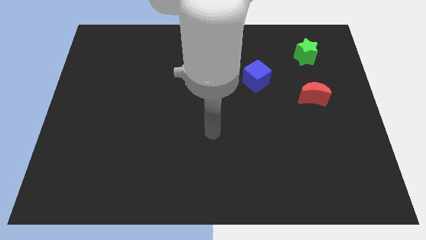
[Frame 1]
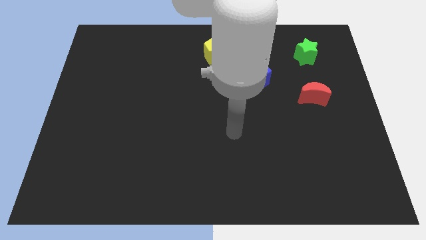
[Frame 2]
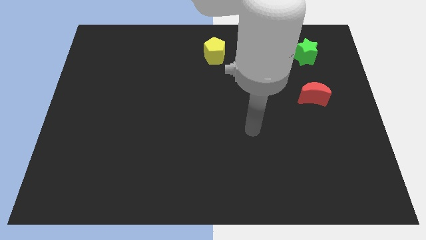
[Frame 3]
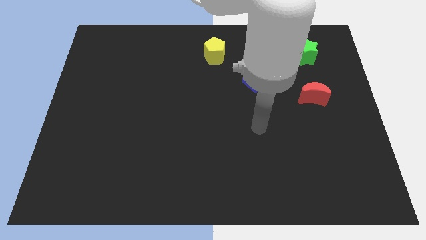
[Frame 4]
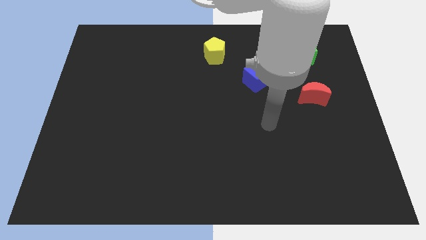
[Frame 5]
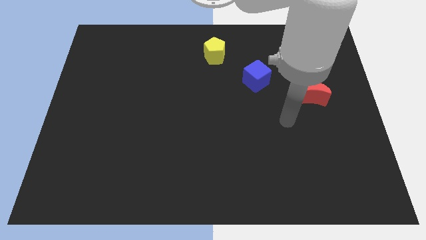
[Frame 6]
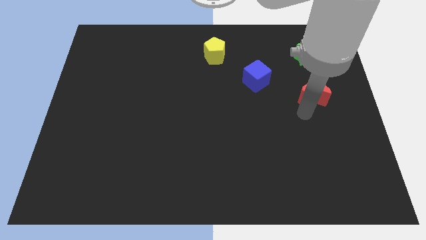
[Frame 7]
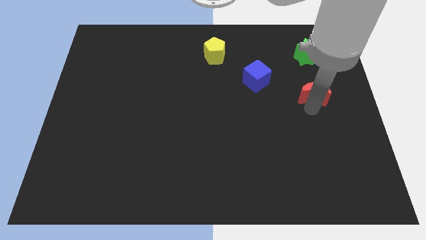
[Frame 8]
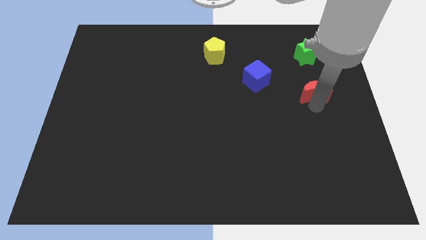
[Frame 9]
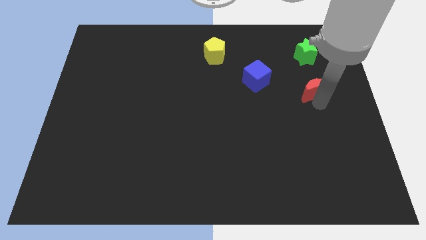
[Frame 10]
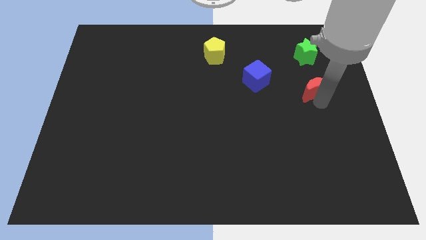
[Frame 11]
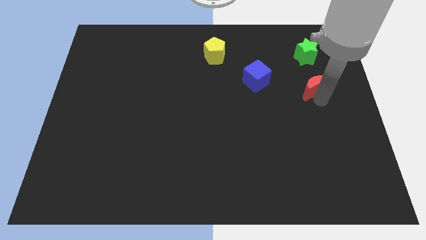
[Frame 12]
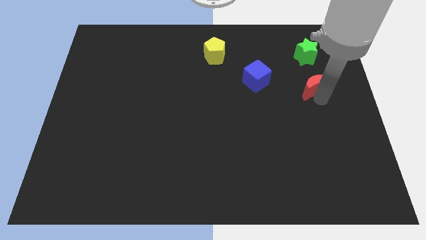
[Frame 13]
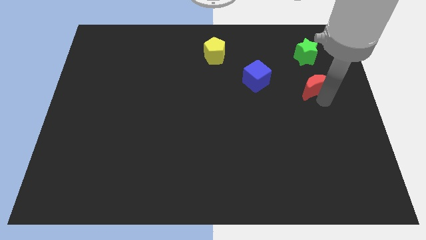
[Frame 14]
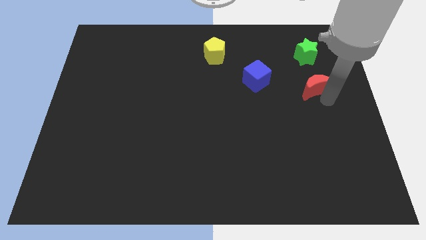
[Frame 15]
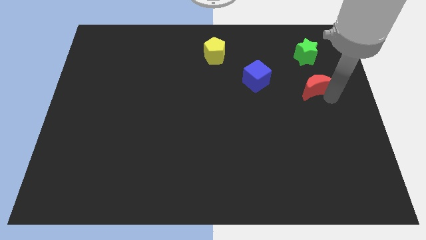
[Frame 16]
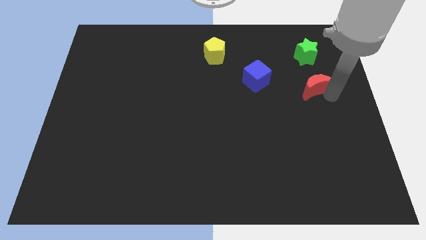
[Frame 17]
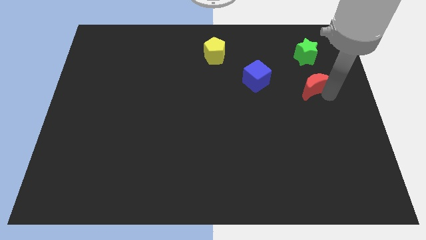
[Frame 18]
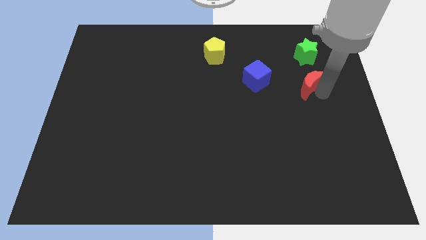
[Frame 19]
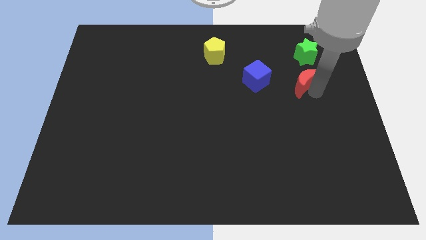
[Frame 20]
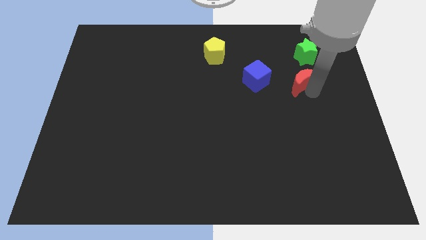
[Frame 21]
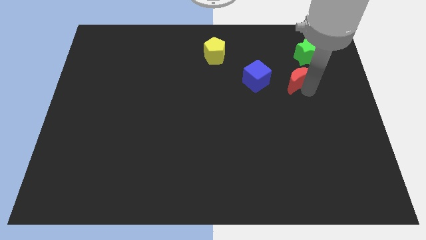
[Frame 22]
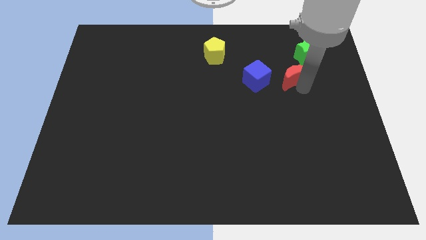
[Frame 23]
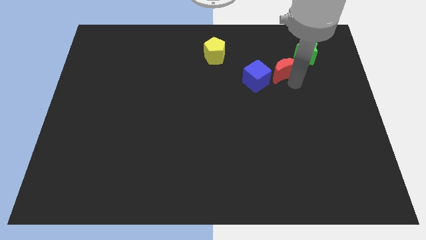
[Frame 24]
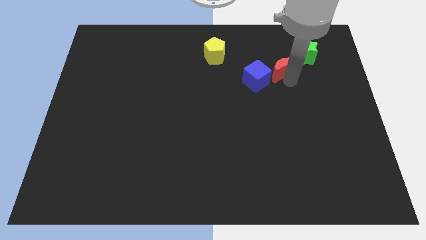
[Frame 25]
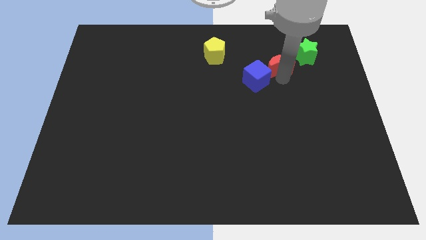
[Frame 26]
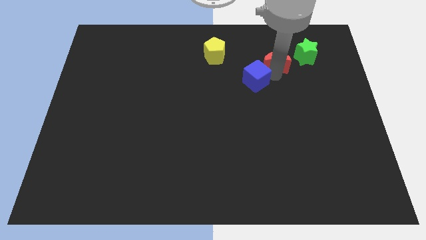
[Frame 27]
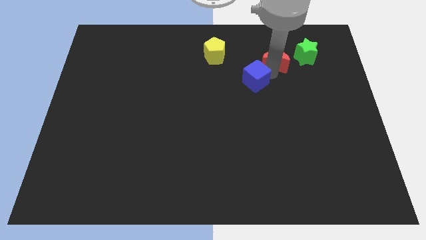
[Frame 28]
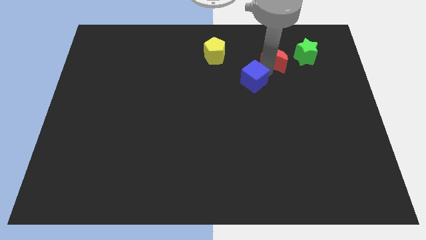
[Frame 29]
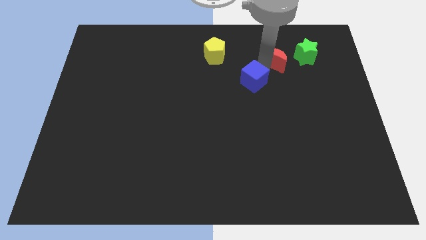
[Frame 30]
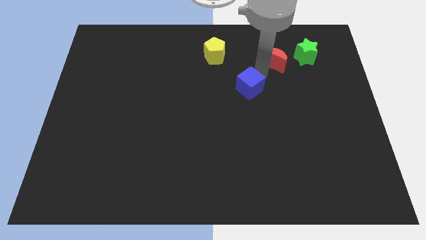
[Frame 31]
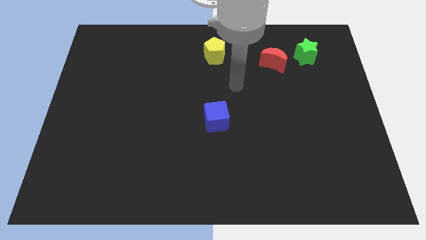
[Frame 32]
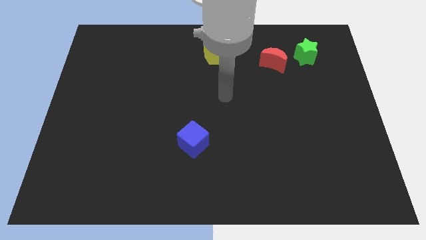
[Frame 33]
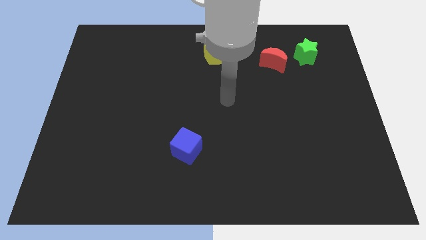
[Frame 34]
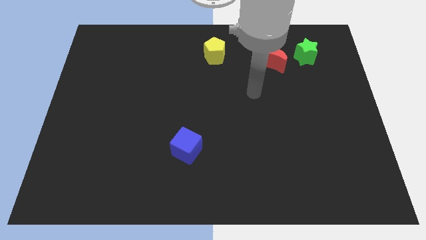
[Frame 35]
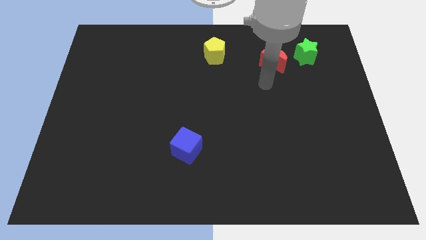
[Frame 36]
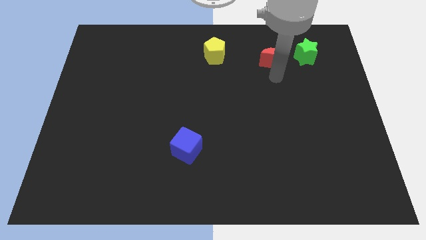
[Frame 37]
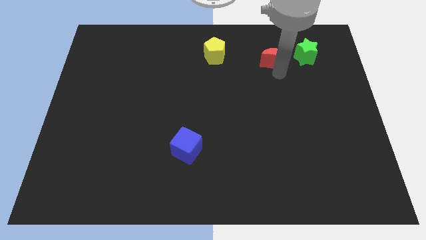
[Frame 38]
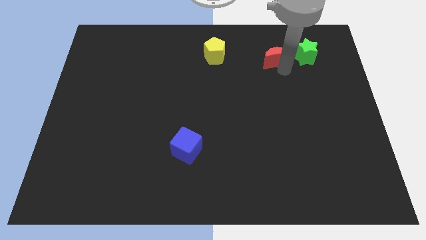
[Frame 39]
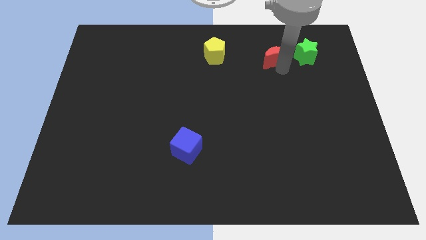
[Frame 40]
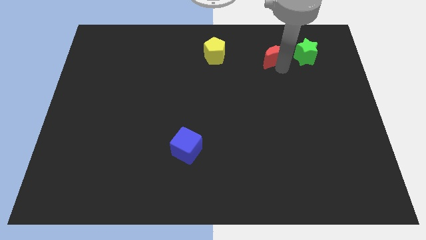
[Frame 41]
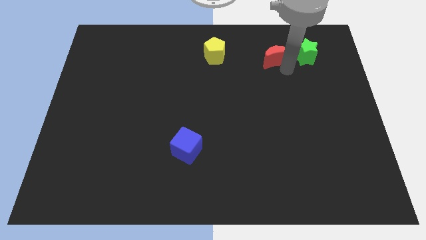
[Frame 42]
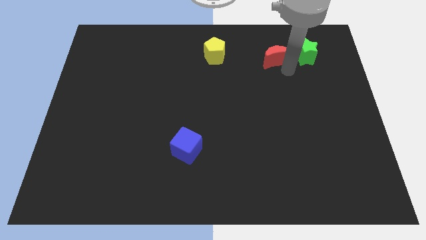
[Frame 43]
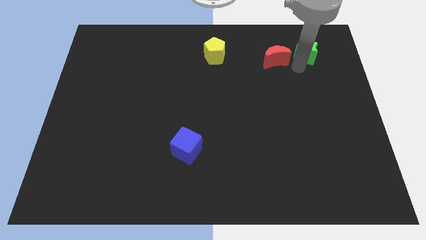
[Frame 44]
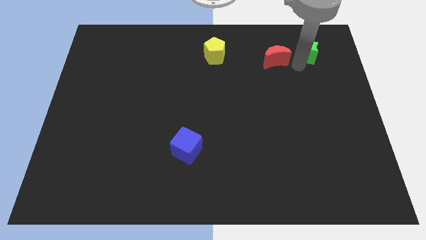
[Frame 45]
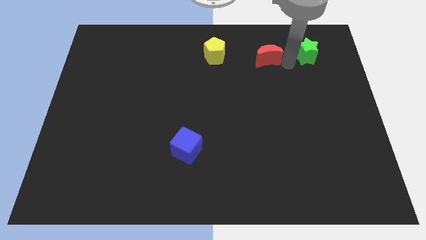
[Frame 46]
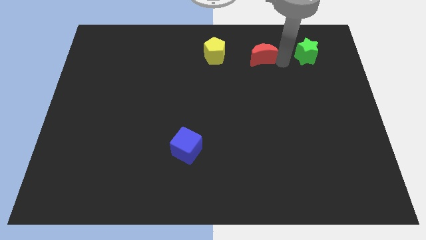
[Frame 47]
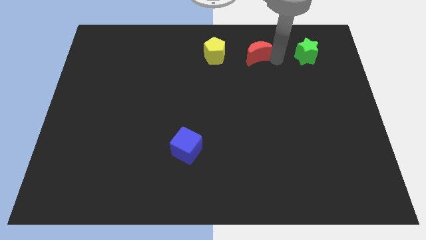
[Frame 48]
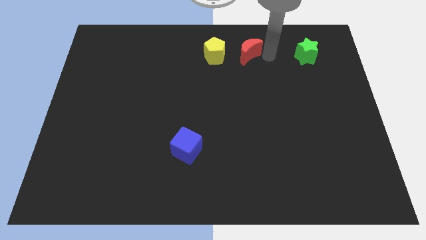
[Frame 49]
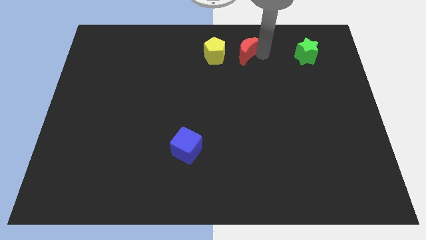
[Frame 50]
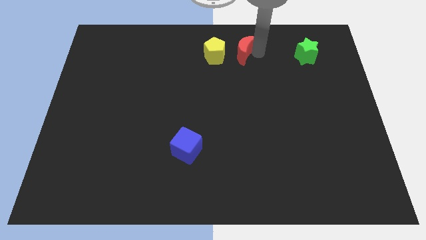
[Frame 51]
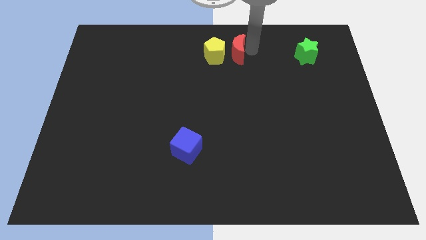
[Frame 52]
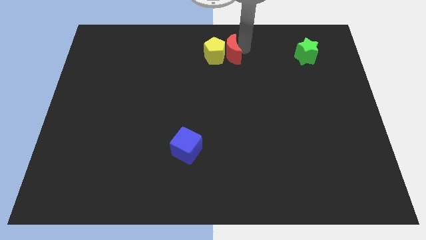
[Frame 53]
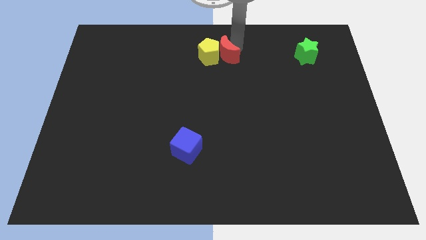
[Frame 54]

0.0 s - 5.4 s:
slide the red block close to the yellow block

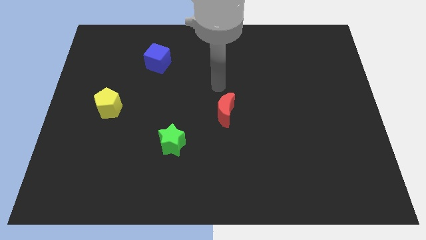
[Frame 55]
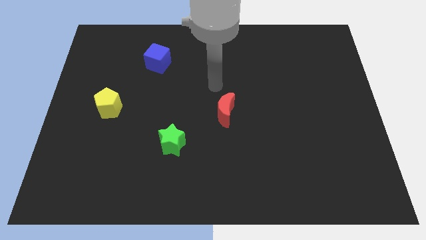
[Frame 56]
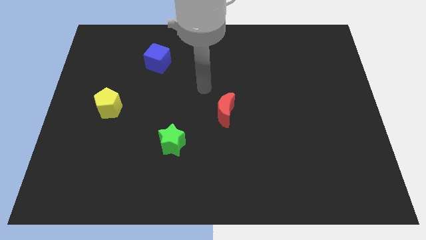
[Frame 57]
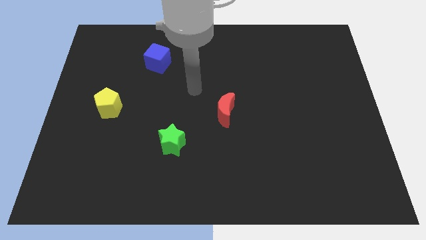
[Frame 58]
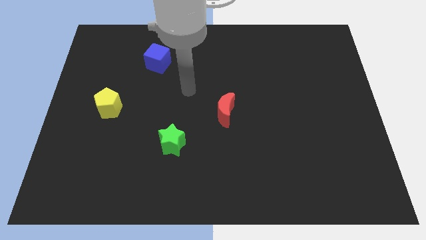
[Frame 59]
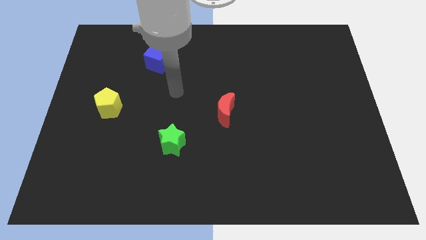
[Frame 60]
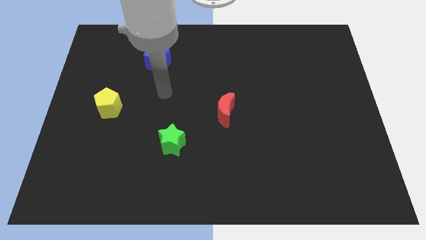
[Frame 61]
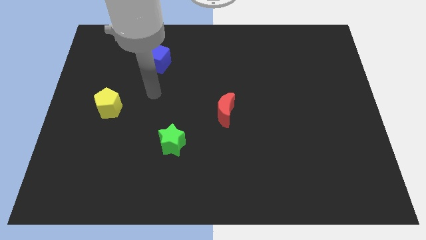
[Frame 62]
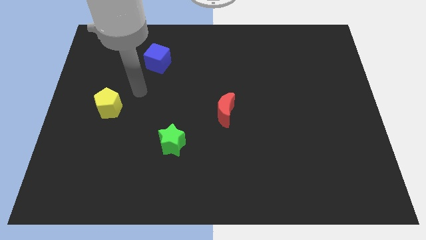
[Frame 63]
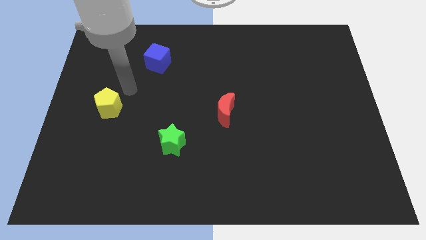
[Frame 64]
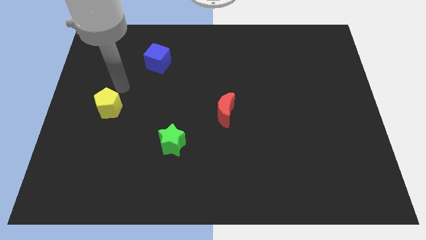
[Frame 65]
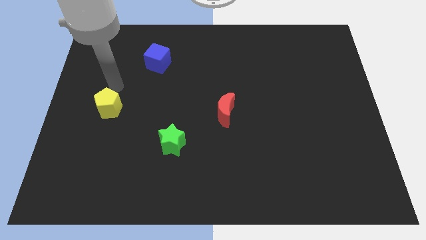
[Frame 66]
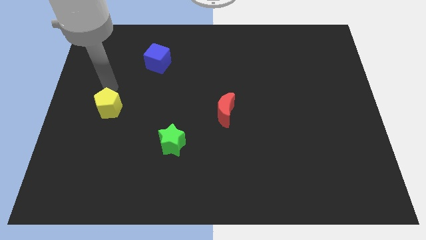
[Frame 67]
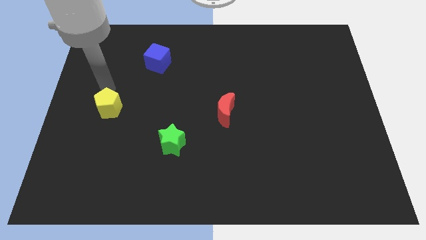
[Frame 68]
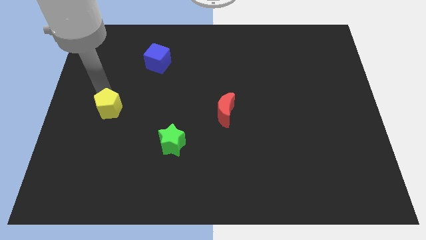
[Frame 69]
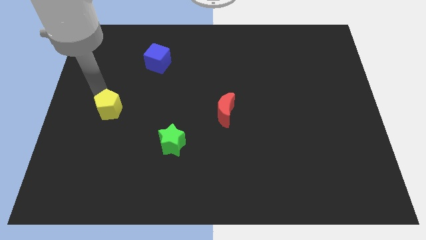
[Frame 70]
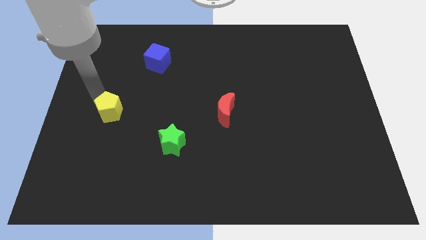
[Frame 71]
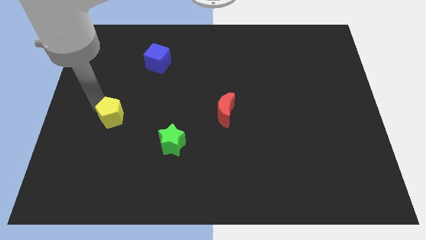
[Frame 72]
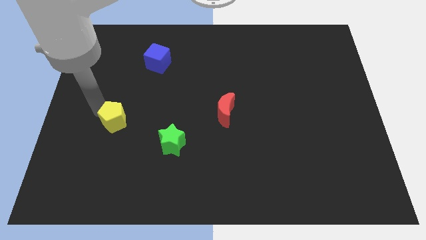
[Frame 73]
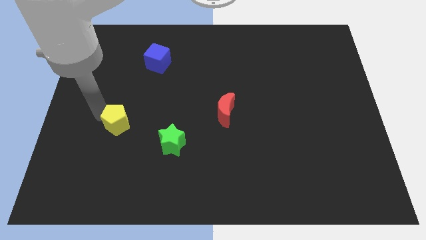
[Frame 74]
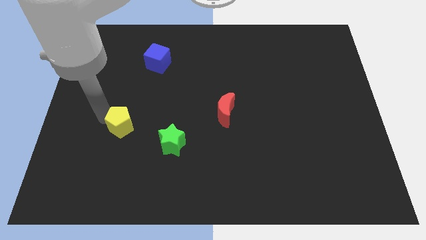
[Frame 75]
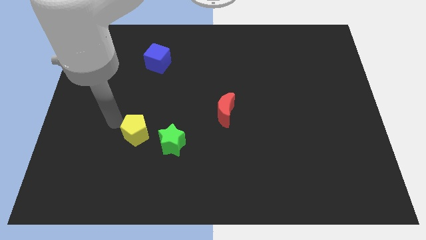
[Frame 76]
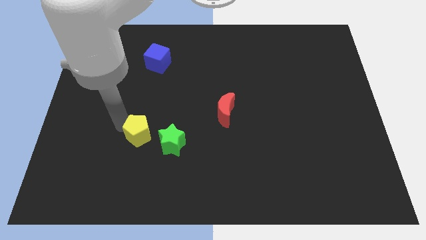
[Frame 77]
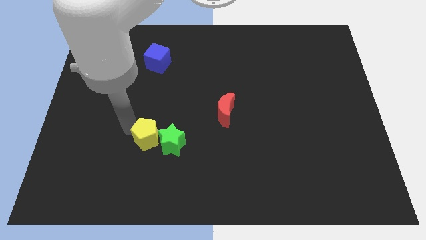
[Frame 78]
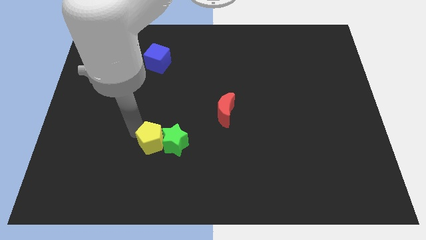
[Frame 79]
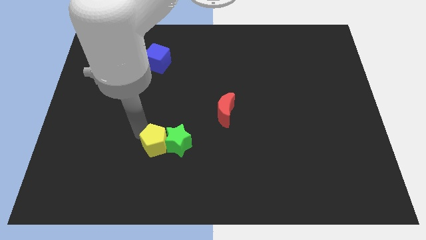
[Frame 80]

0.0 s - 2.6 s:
push the yellow block close to the green star
